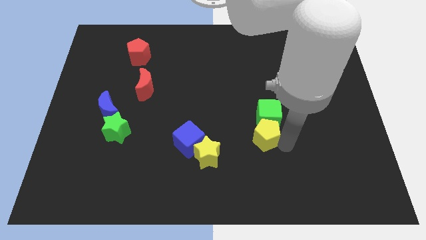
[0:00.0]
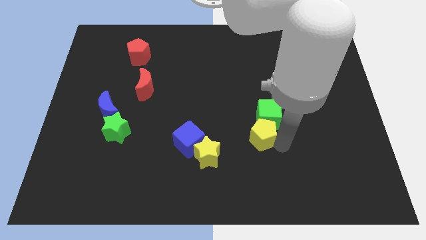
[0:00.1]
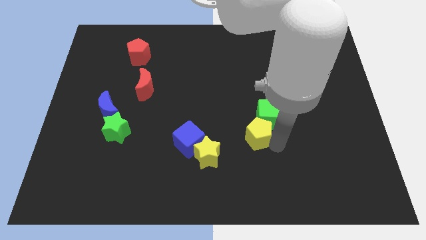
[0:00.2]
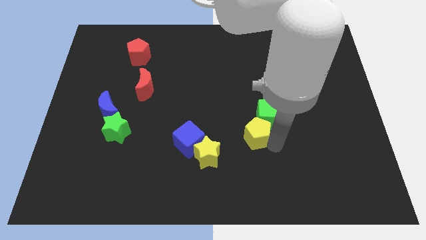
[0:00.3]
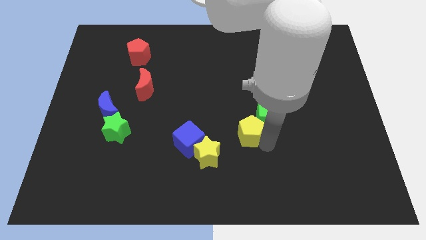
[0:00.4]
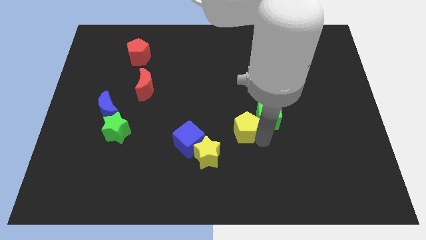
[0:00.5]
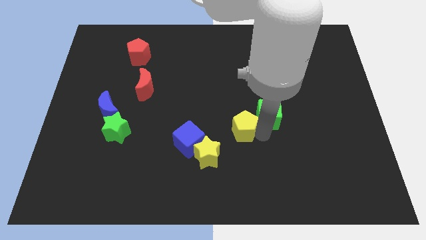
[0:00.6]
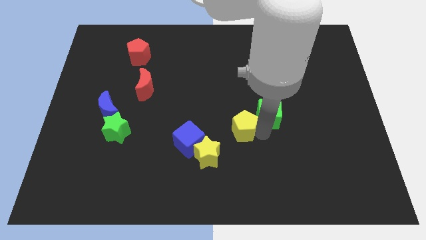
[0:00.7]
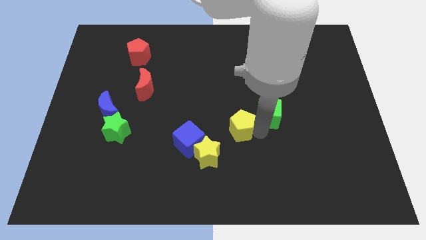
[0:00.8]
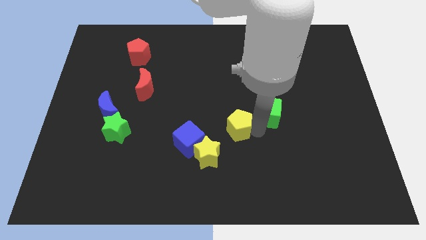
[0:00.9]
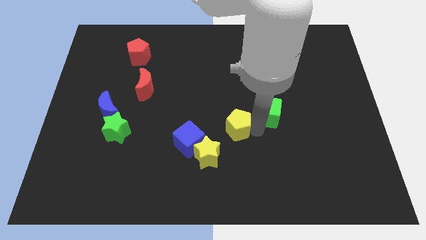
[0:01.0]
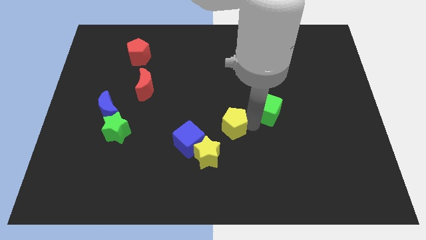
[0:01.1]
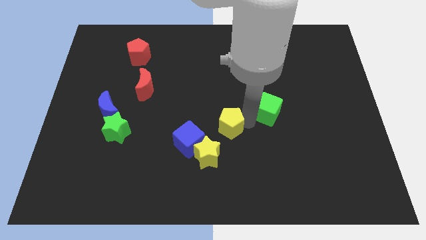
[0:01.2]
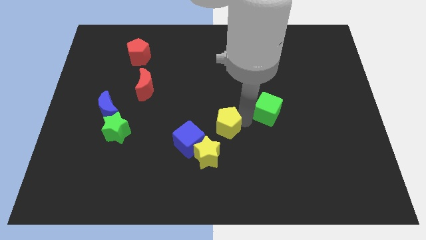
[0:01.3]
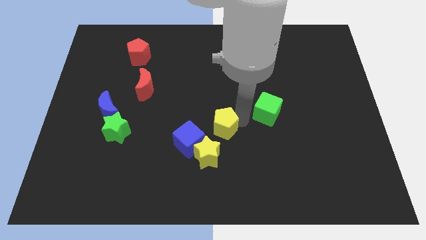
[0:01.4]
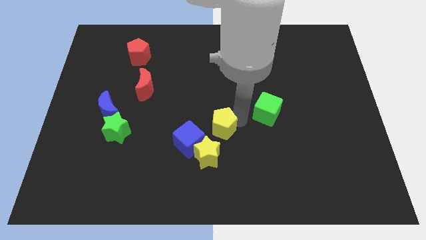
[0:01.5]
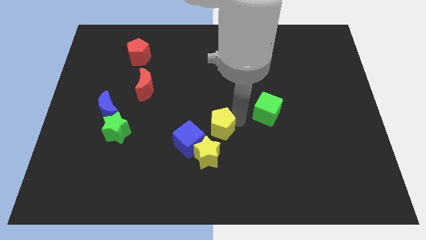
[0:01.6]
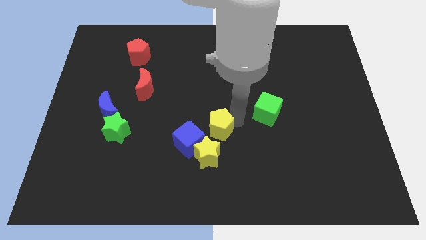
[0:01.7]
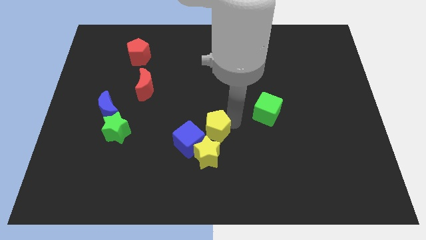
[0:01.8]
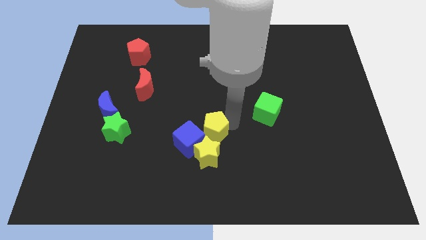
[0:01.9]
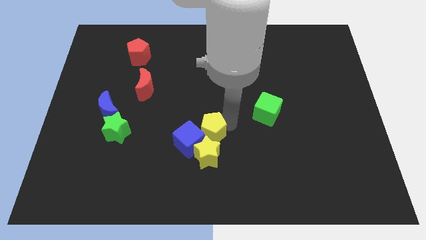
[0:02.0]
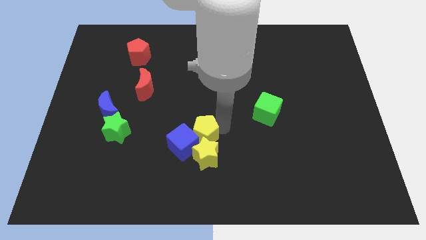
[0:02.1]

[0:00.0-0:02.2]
place yellow star near blue cube

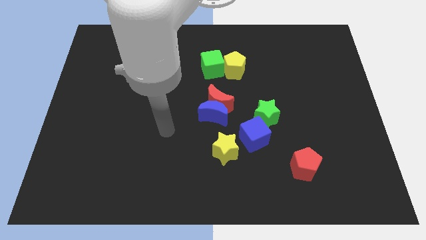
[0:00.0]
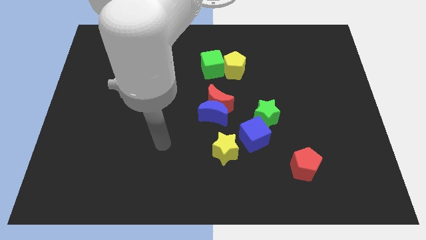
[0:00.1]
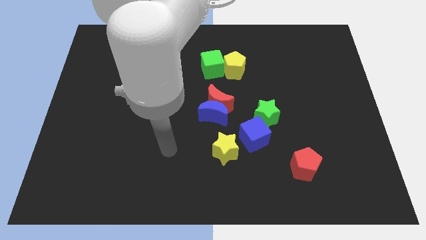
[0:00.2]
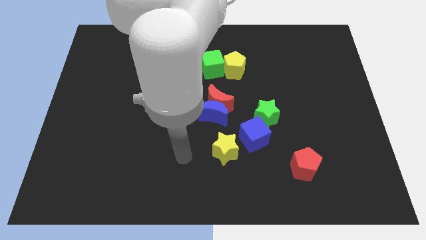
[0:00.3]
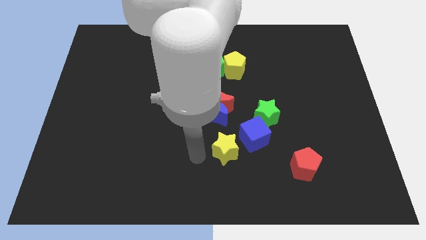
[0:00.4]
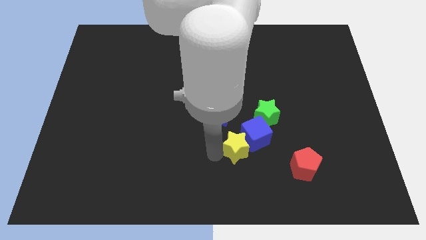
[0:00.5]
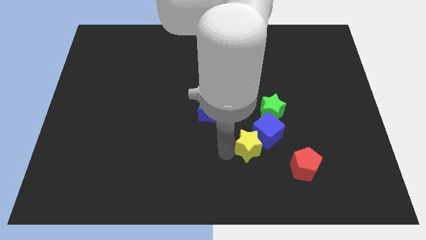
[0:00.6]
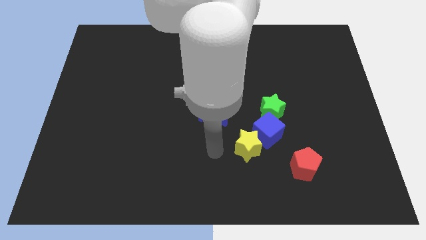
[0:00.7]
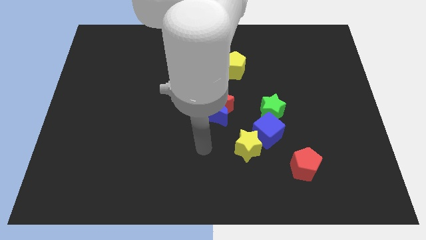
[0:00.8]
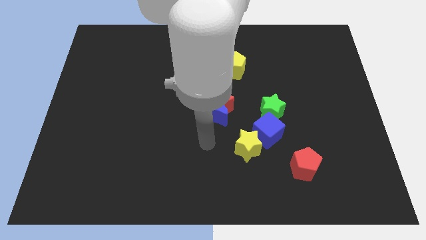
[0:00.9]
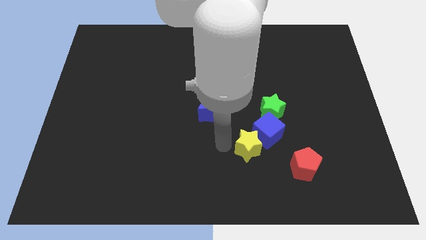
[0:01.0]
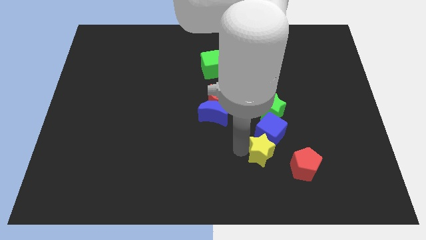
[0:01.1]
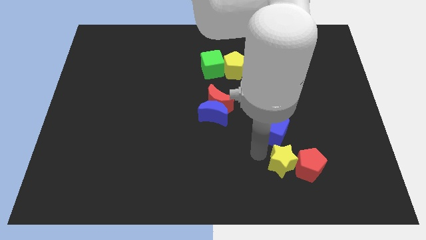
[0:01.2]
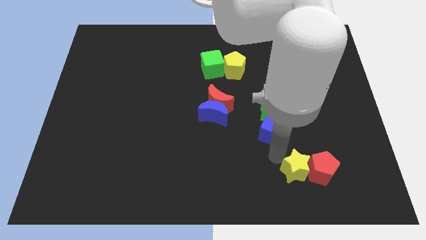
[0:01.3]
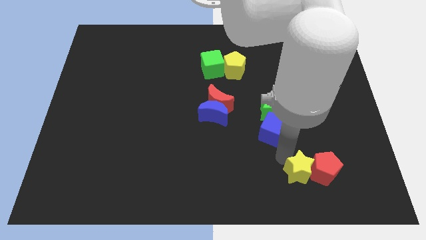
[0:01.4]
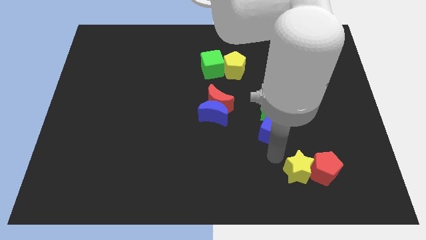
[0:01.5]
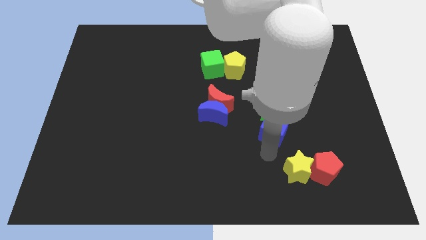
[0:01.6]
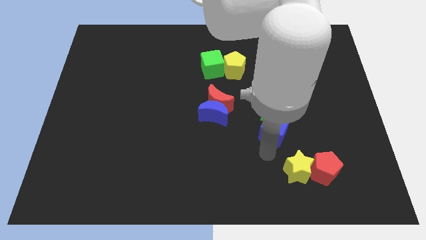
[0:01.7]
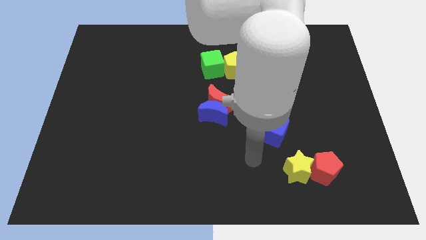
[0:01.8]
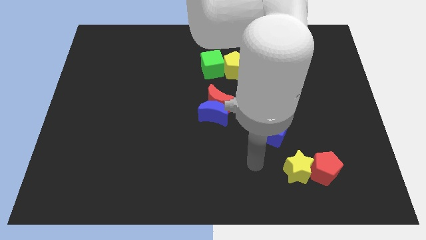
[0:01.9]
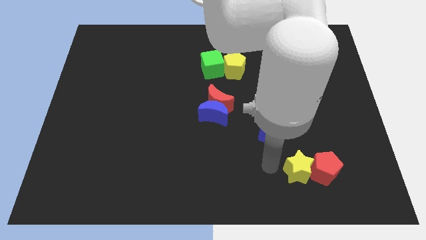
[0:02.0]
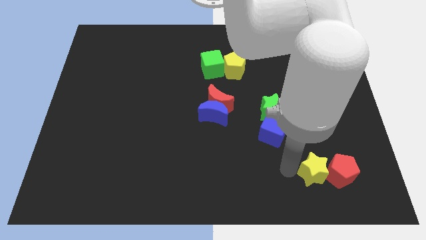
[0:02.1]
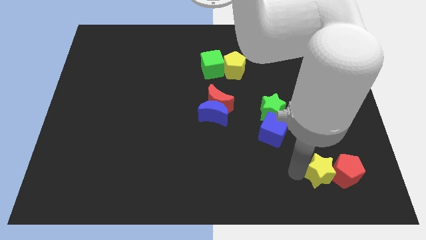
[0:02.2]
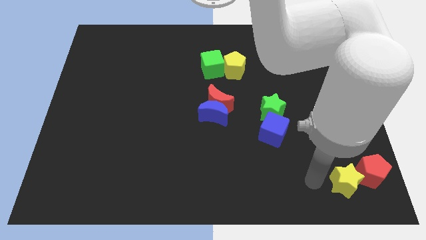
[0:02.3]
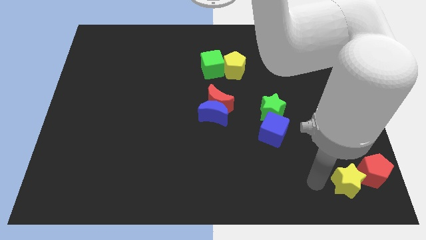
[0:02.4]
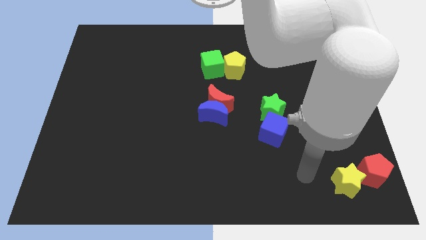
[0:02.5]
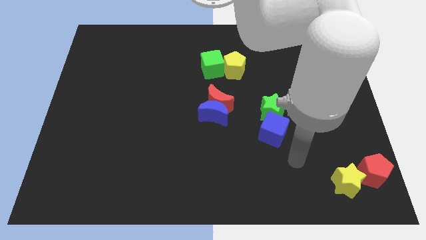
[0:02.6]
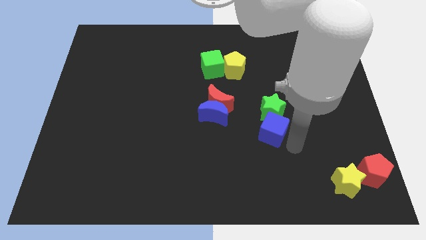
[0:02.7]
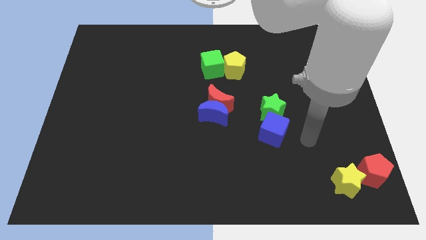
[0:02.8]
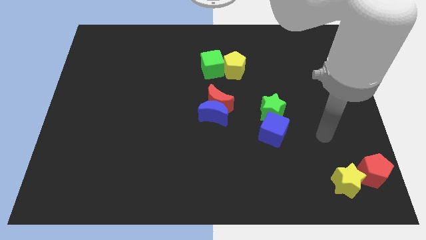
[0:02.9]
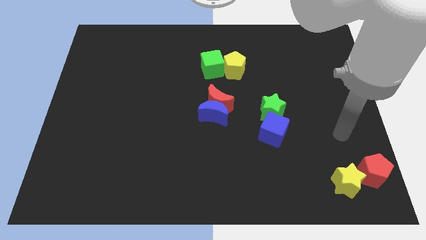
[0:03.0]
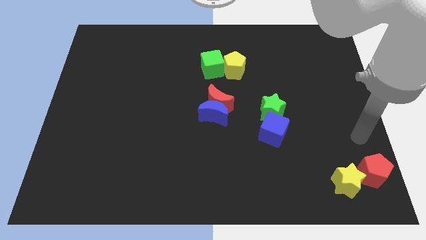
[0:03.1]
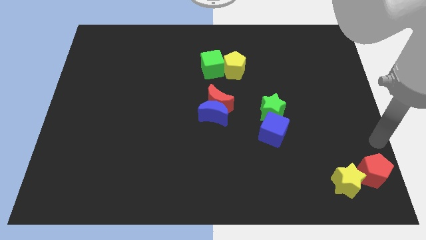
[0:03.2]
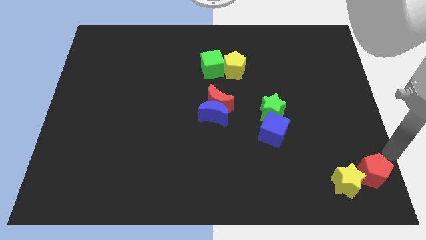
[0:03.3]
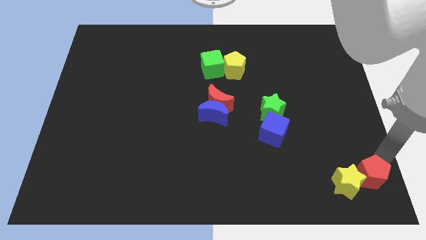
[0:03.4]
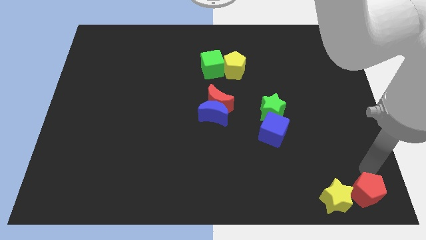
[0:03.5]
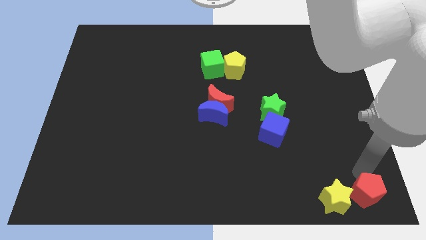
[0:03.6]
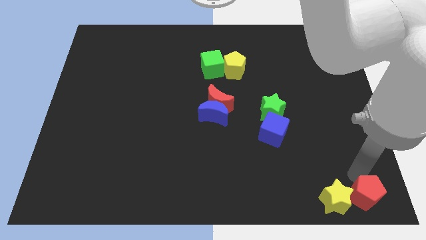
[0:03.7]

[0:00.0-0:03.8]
move the red pentagon to the right bottom side of the board

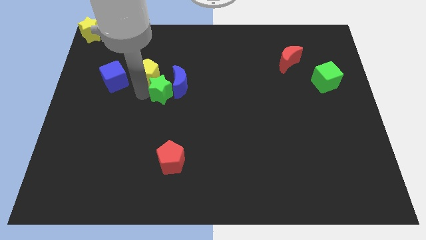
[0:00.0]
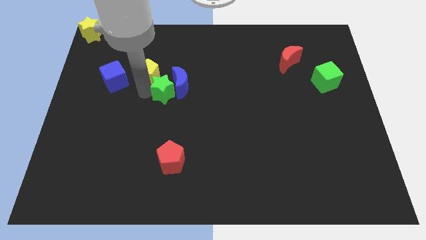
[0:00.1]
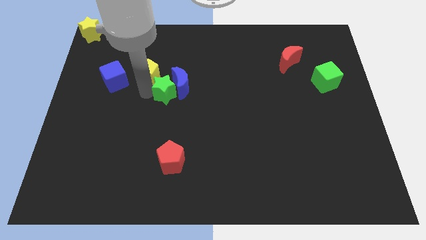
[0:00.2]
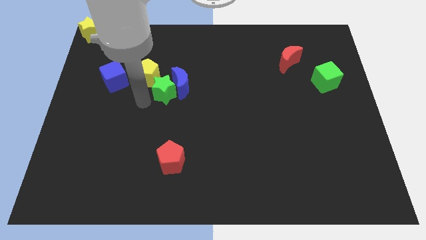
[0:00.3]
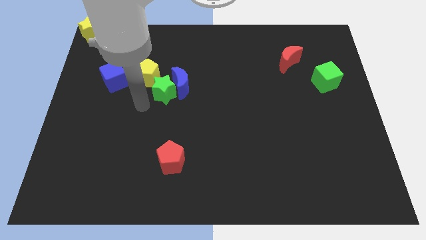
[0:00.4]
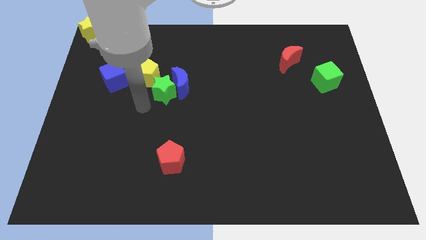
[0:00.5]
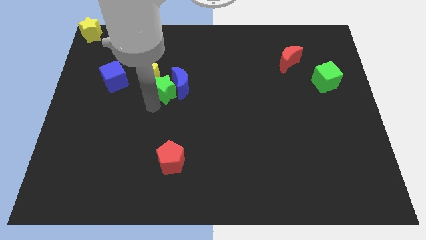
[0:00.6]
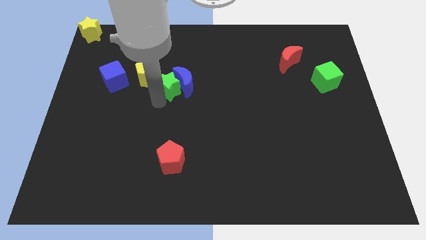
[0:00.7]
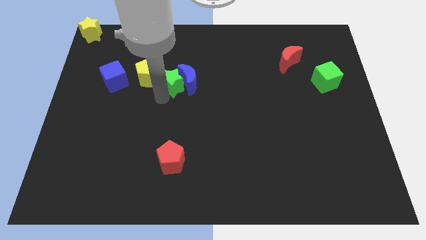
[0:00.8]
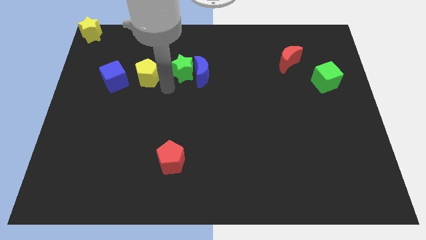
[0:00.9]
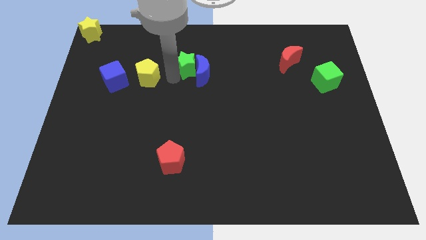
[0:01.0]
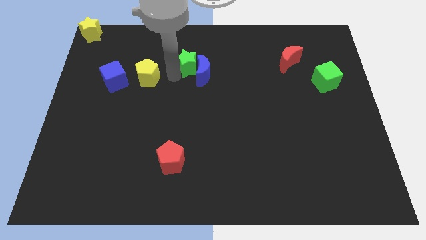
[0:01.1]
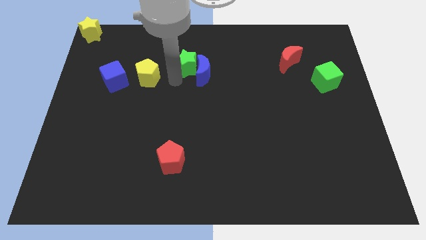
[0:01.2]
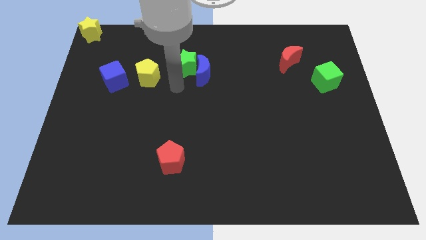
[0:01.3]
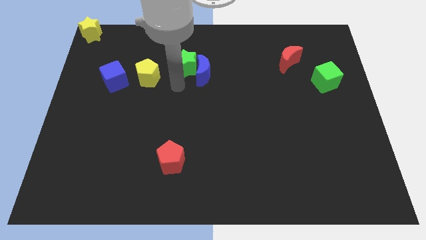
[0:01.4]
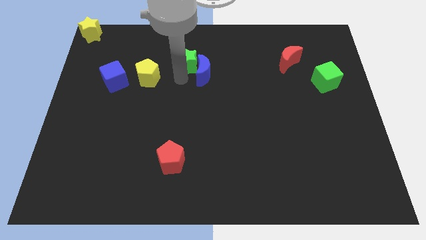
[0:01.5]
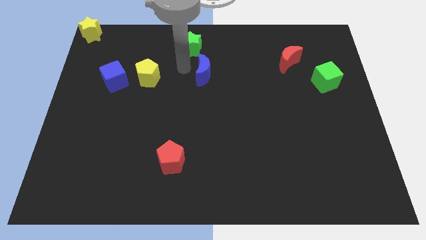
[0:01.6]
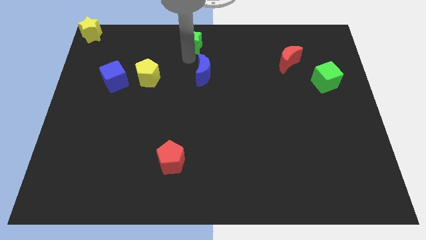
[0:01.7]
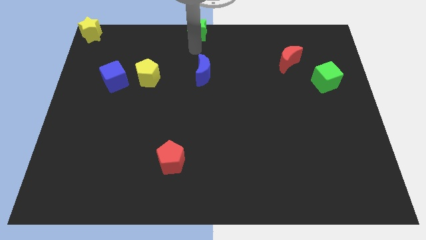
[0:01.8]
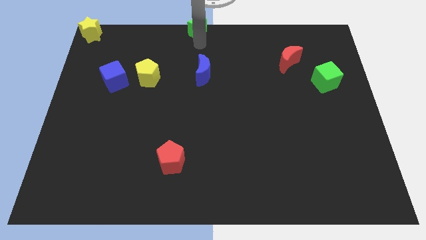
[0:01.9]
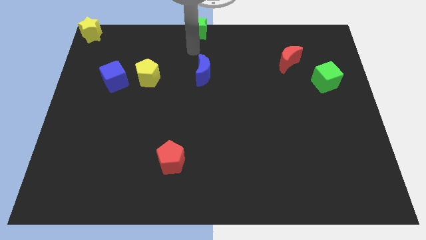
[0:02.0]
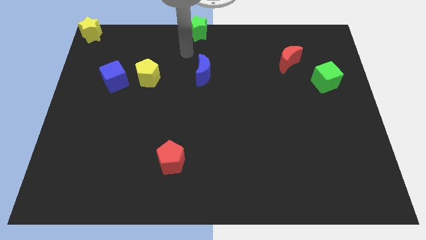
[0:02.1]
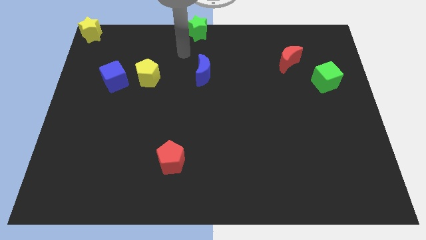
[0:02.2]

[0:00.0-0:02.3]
move the green star to the top center

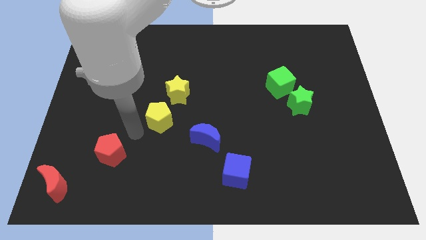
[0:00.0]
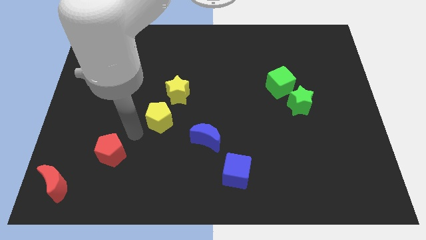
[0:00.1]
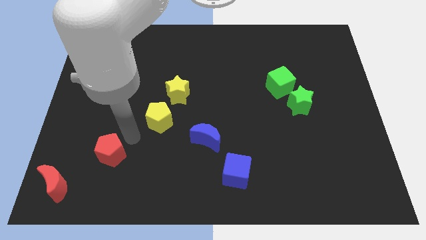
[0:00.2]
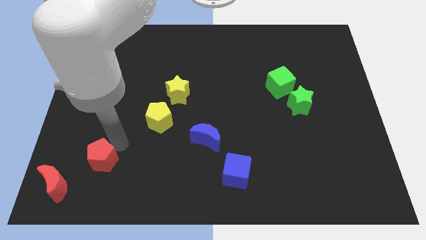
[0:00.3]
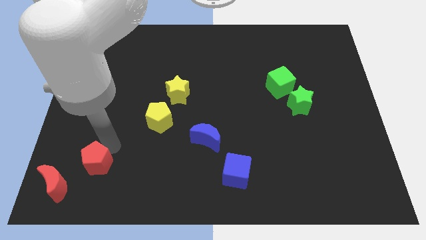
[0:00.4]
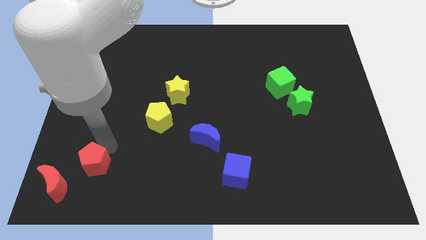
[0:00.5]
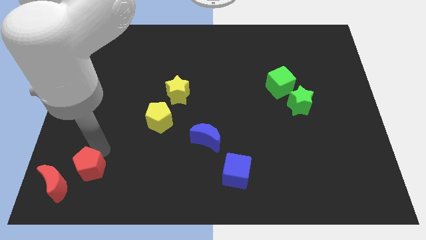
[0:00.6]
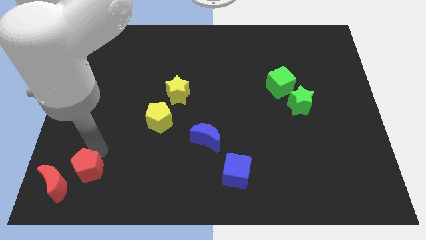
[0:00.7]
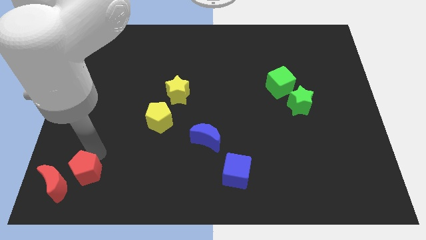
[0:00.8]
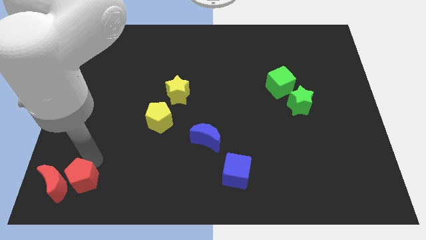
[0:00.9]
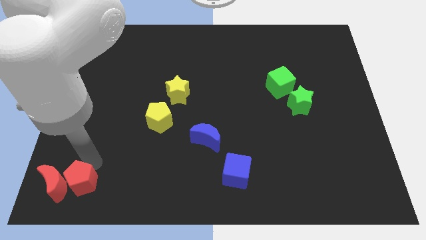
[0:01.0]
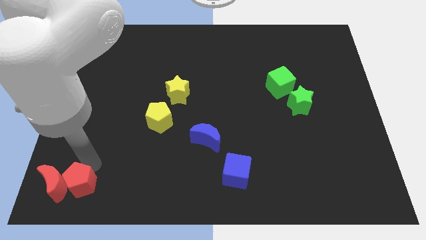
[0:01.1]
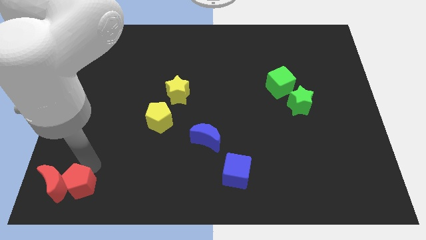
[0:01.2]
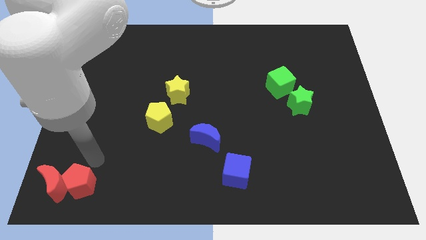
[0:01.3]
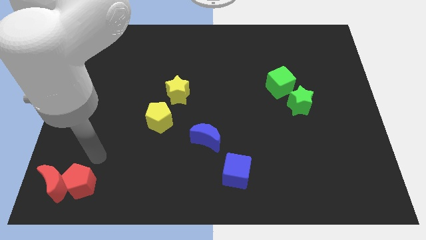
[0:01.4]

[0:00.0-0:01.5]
place the red pentagon close to red crescent
